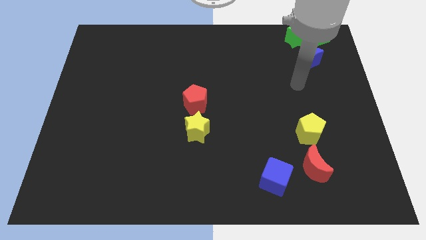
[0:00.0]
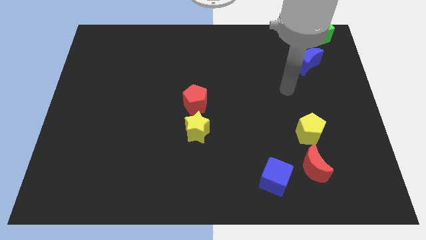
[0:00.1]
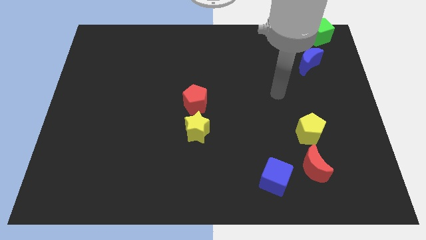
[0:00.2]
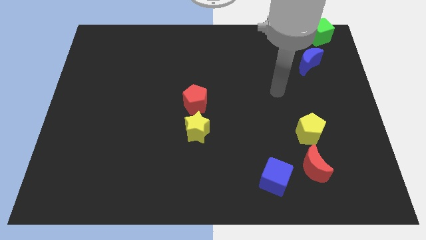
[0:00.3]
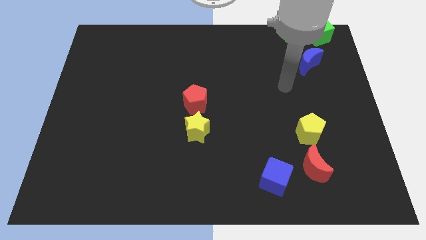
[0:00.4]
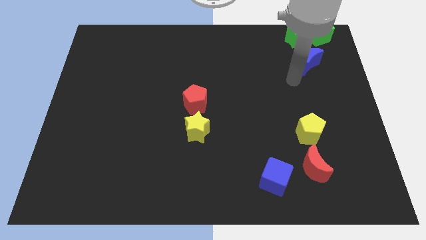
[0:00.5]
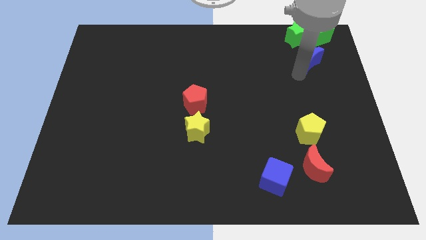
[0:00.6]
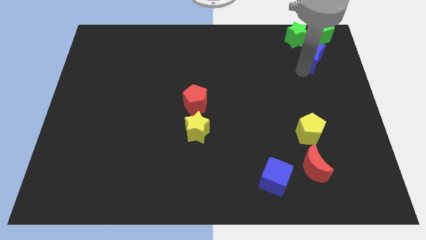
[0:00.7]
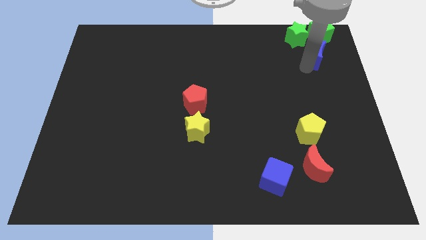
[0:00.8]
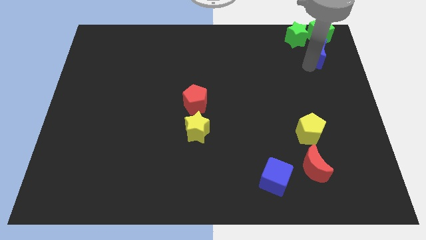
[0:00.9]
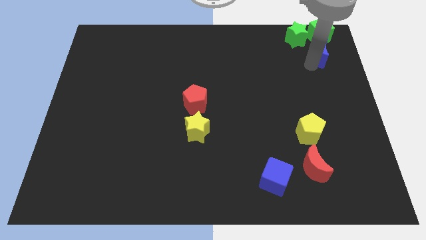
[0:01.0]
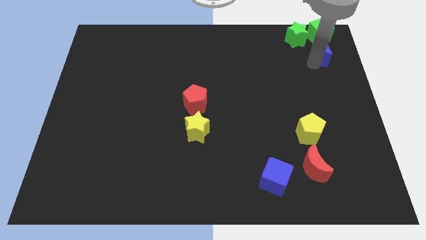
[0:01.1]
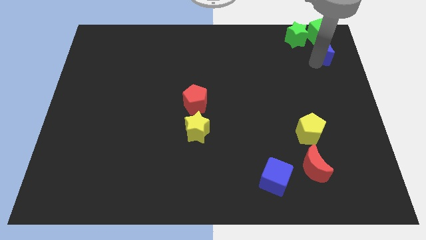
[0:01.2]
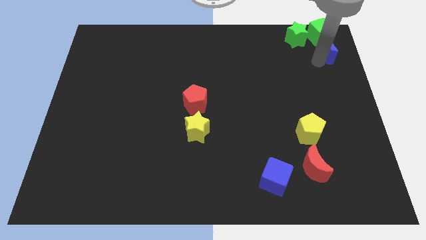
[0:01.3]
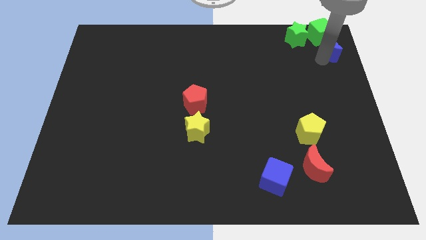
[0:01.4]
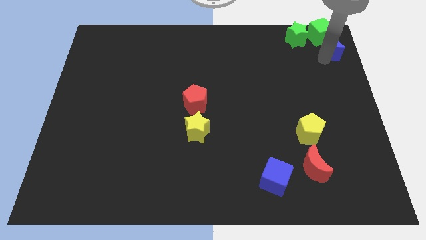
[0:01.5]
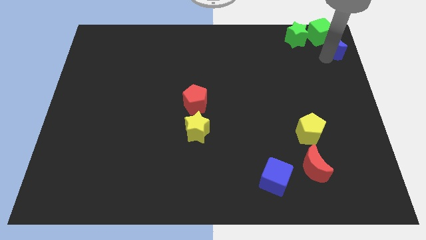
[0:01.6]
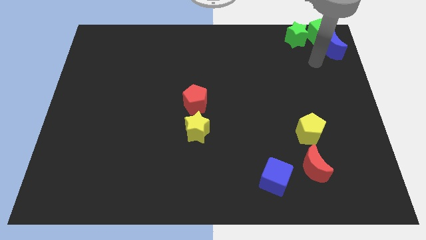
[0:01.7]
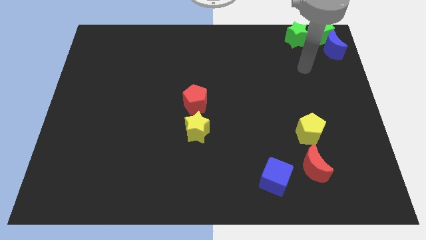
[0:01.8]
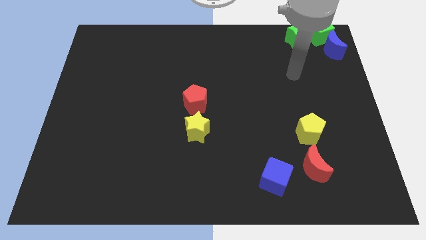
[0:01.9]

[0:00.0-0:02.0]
move yourself away from blue crescent

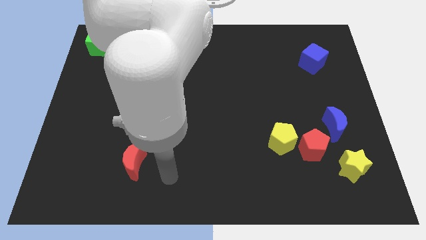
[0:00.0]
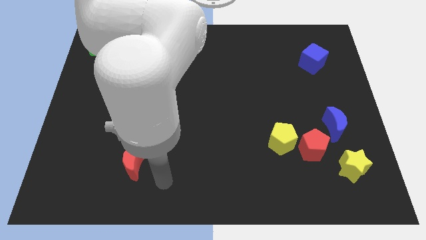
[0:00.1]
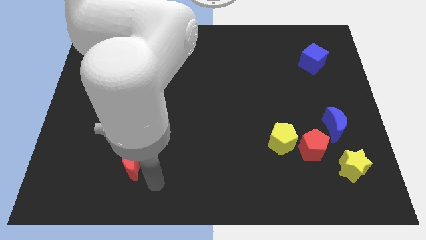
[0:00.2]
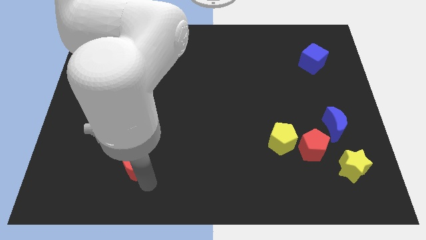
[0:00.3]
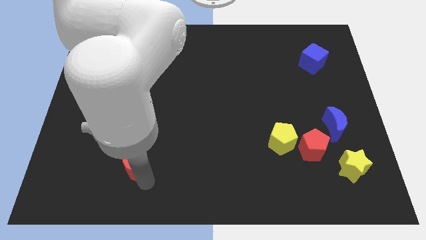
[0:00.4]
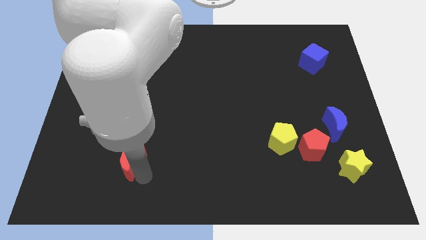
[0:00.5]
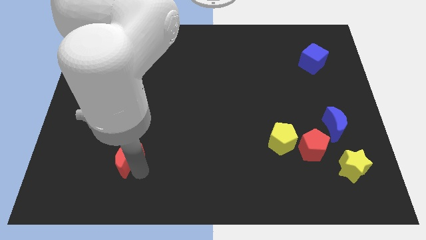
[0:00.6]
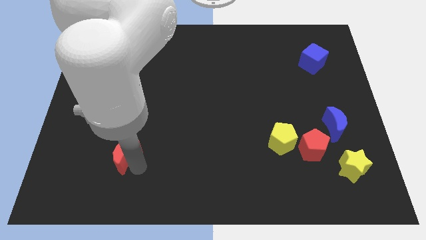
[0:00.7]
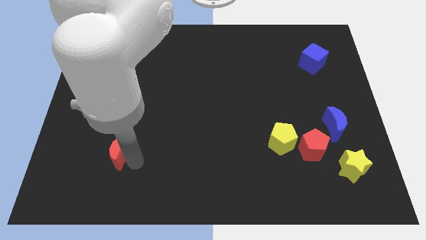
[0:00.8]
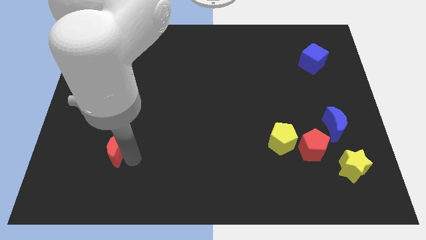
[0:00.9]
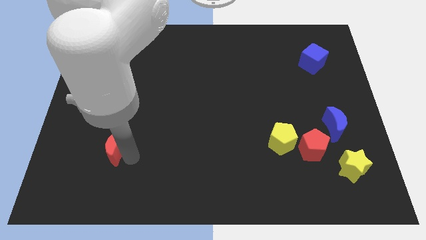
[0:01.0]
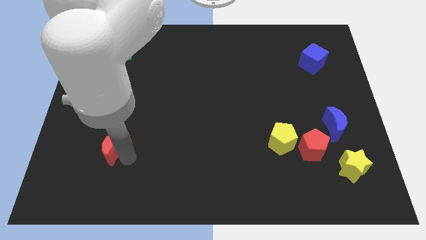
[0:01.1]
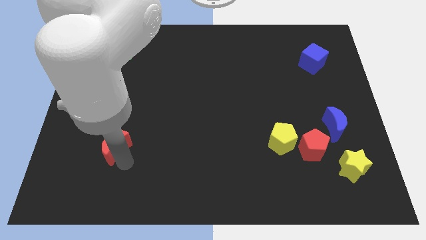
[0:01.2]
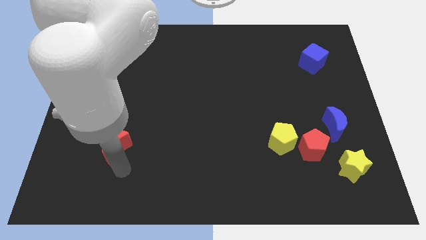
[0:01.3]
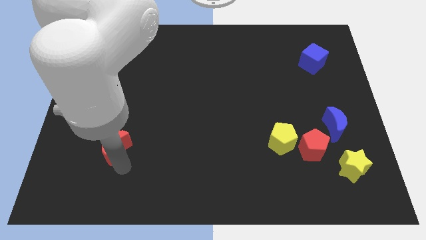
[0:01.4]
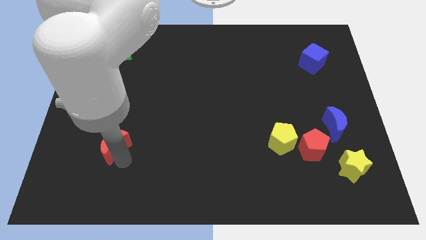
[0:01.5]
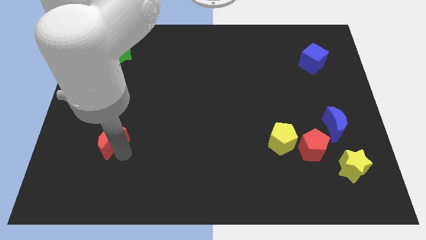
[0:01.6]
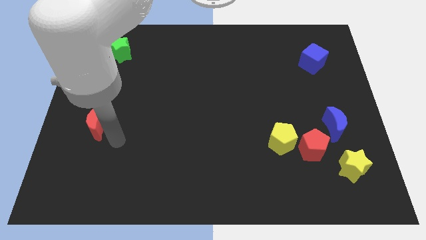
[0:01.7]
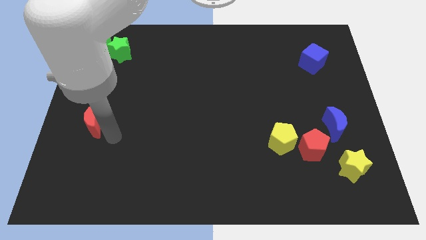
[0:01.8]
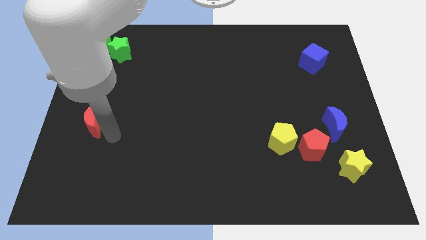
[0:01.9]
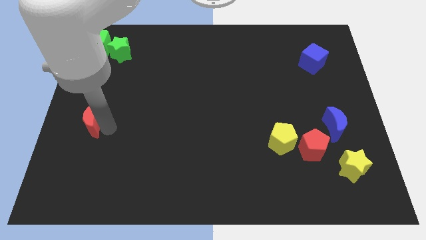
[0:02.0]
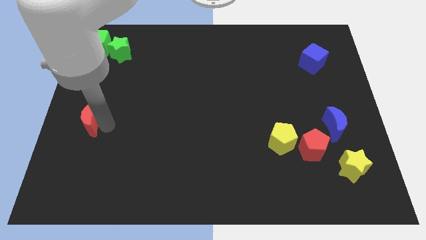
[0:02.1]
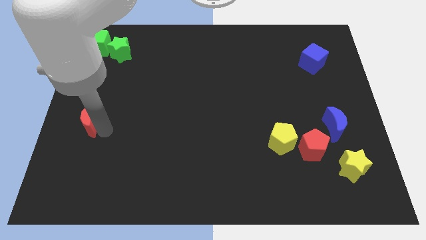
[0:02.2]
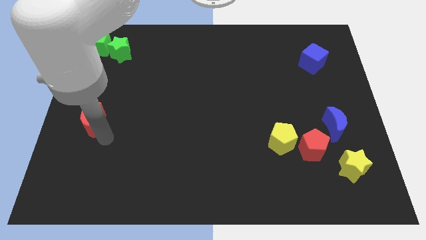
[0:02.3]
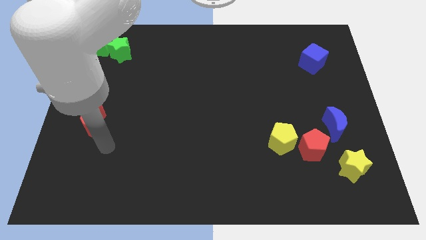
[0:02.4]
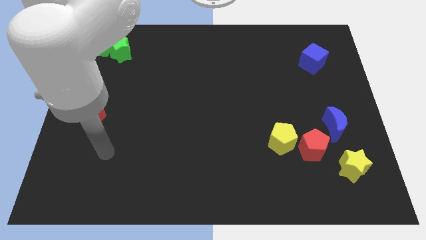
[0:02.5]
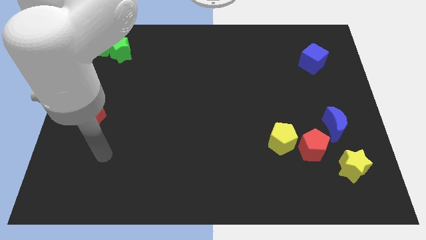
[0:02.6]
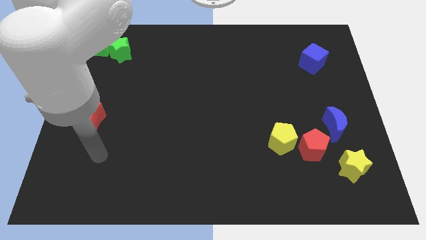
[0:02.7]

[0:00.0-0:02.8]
drag the red moon towards the center left of the board

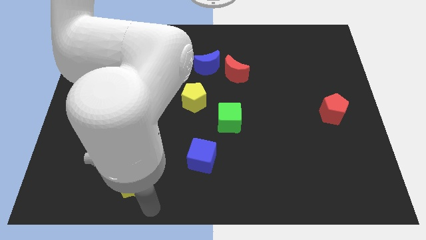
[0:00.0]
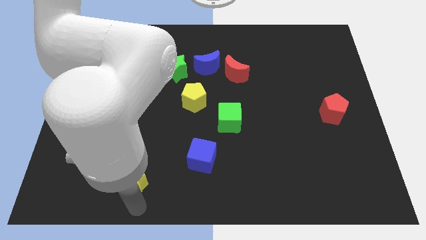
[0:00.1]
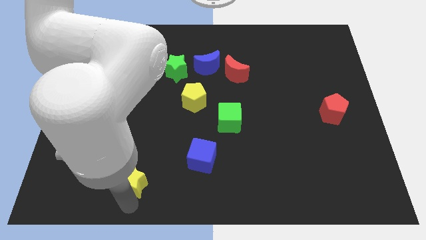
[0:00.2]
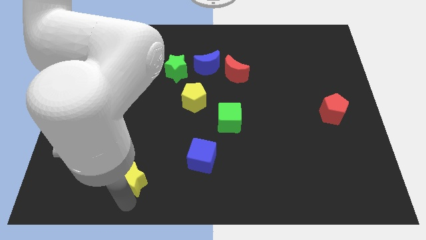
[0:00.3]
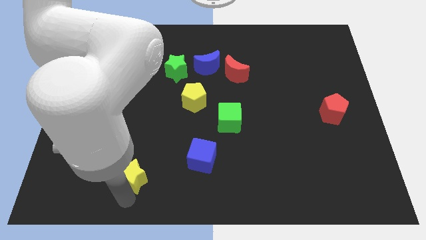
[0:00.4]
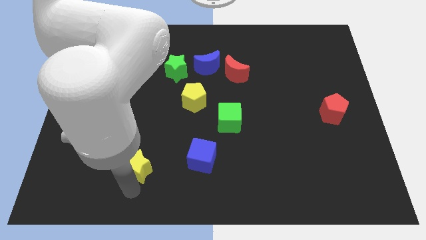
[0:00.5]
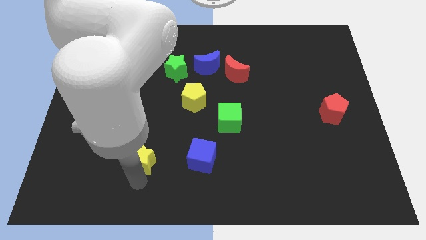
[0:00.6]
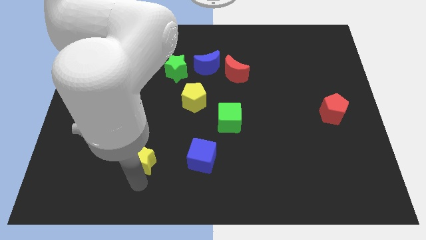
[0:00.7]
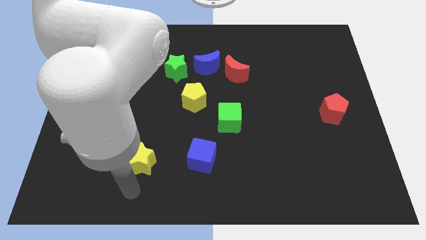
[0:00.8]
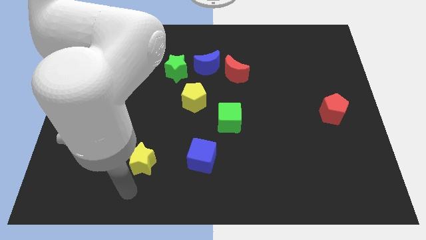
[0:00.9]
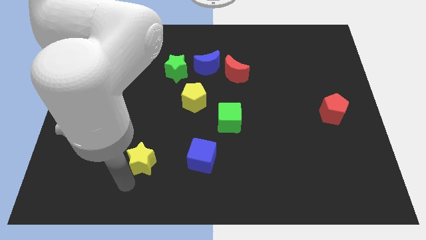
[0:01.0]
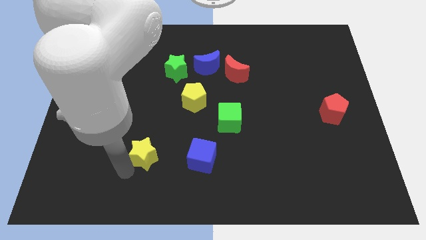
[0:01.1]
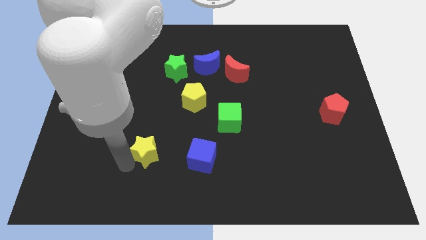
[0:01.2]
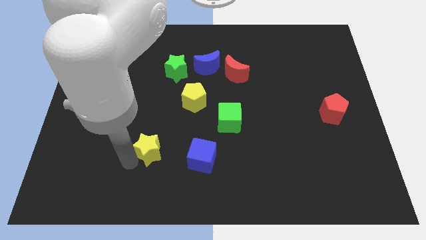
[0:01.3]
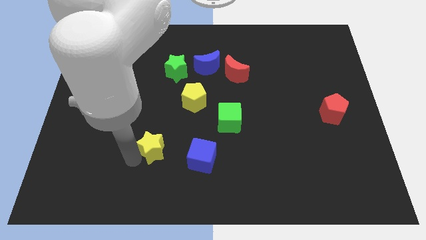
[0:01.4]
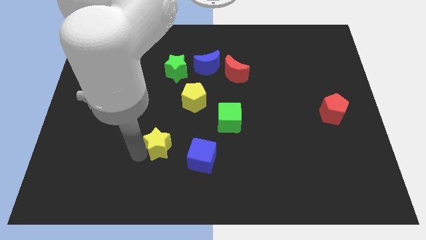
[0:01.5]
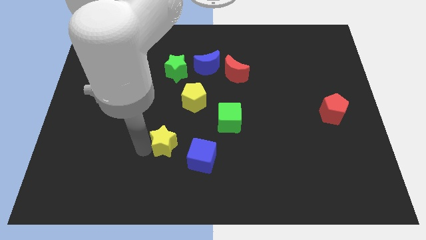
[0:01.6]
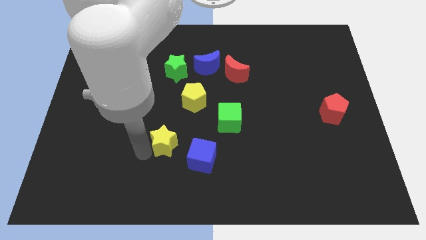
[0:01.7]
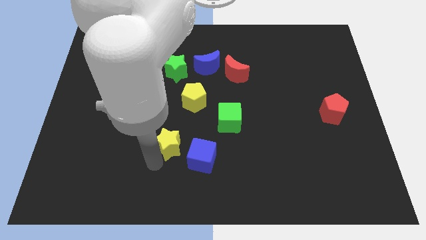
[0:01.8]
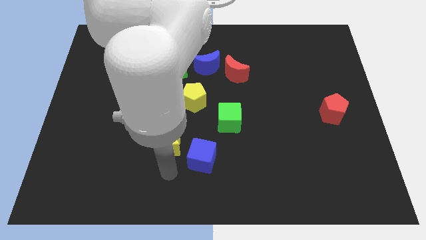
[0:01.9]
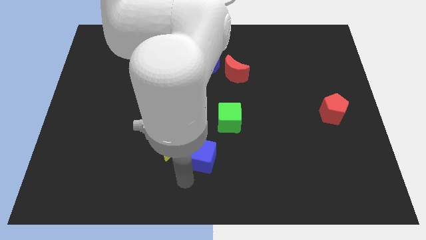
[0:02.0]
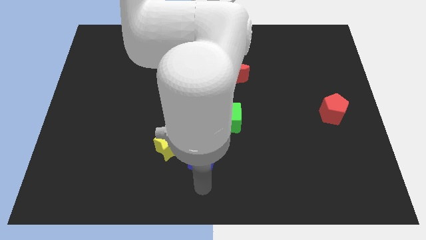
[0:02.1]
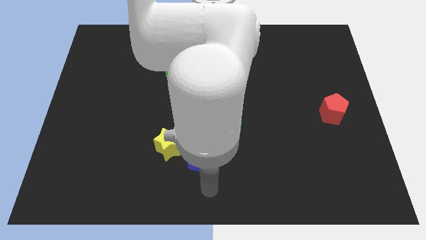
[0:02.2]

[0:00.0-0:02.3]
move the yellow star diagonally left of the blue cube

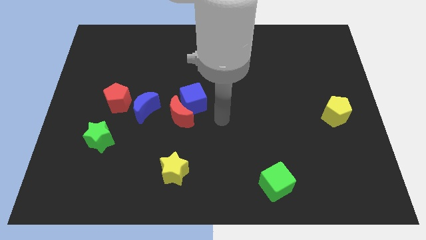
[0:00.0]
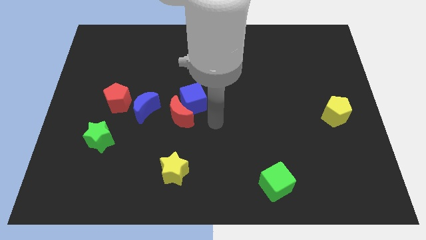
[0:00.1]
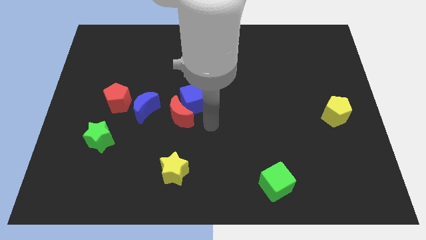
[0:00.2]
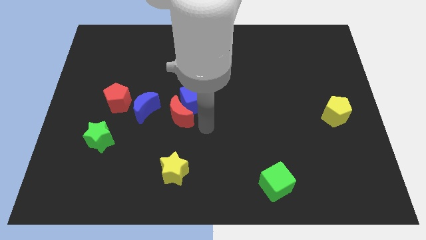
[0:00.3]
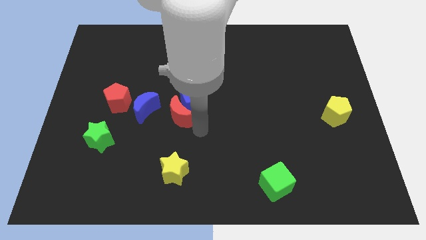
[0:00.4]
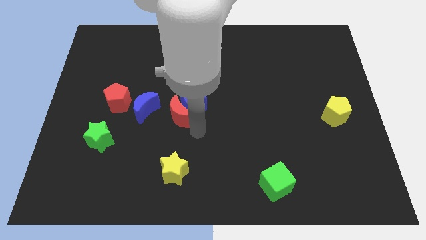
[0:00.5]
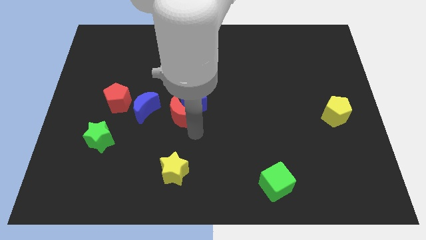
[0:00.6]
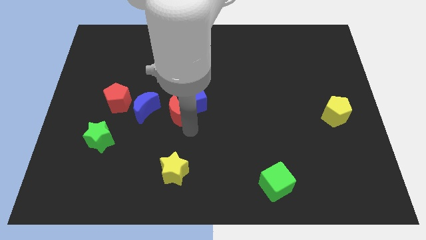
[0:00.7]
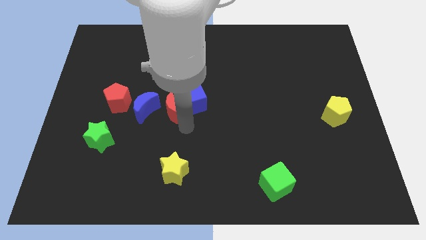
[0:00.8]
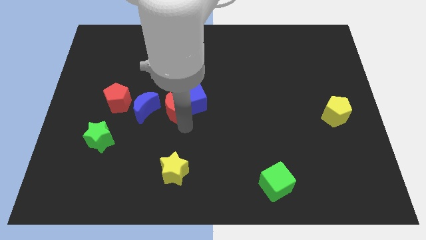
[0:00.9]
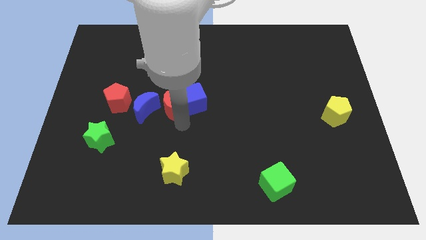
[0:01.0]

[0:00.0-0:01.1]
place the arm at the bottom of red crescent

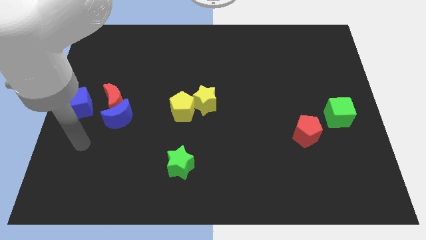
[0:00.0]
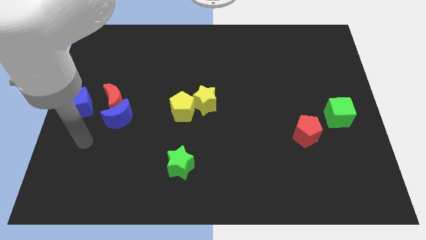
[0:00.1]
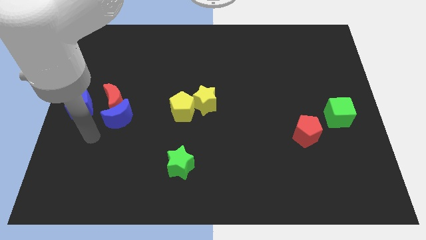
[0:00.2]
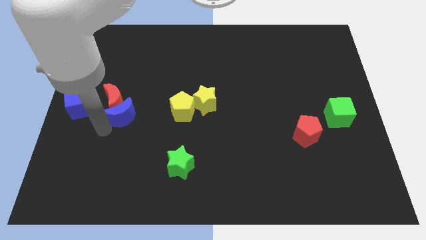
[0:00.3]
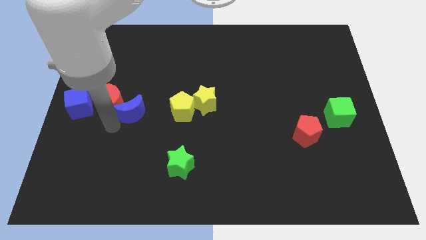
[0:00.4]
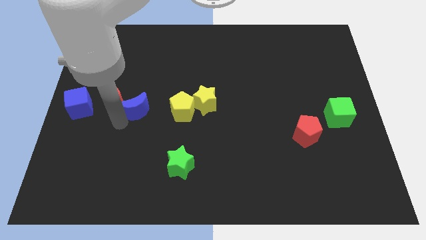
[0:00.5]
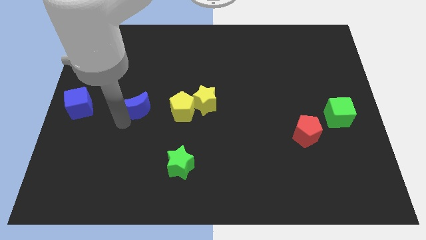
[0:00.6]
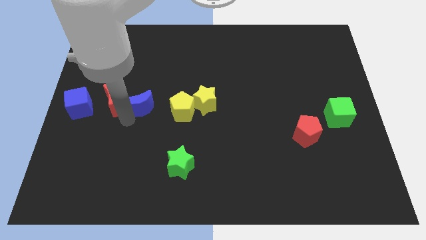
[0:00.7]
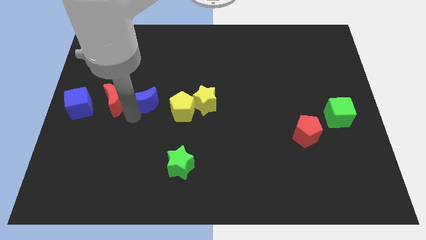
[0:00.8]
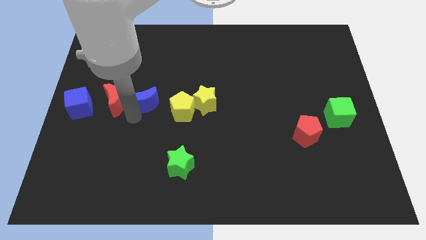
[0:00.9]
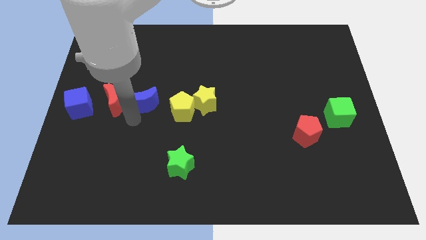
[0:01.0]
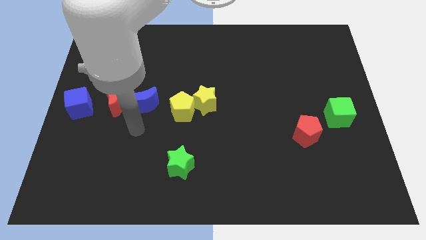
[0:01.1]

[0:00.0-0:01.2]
separate the blue crescent from red crescent
